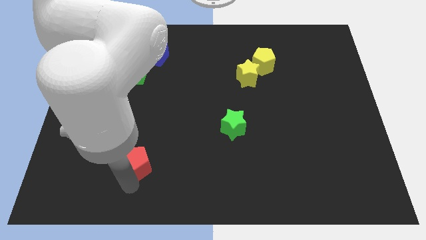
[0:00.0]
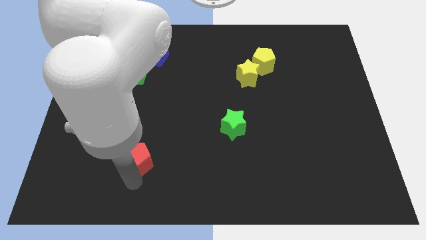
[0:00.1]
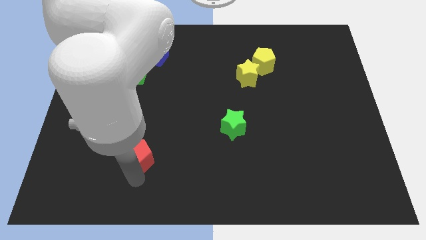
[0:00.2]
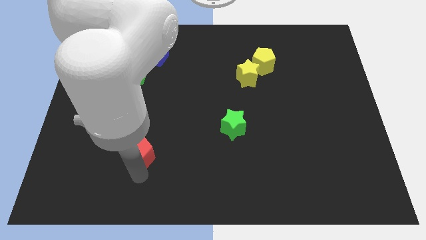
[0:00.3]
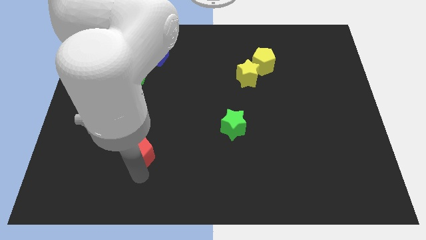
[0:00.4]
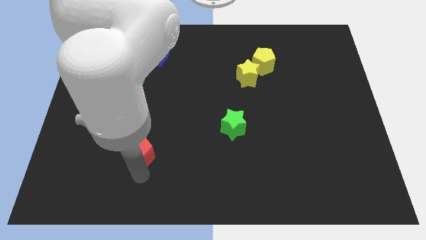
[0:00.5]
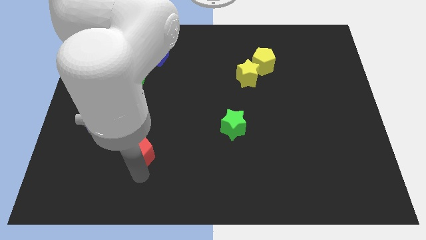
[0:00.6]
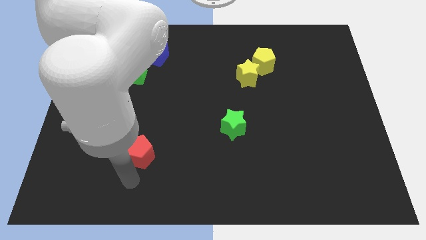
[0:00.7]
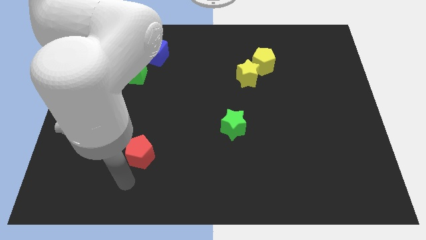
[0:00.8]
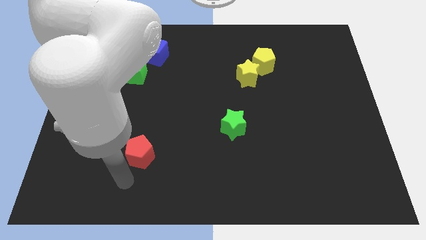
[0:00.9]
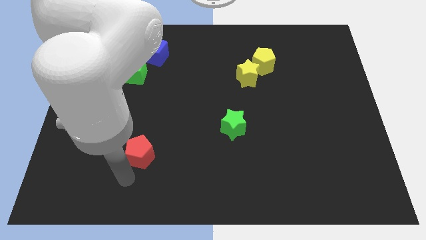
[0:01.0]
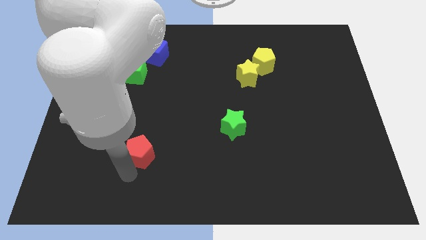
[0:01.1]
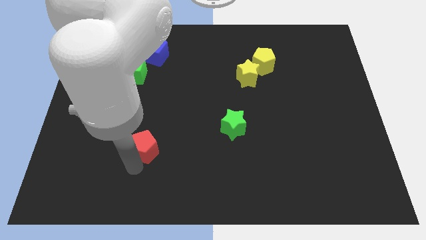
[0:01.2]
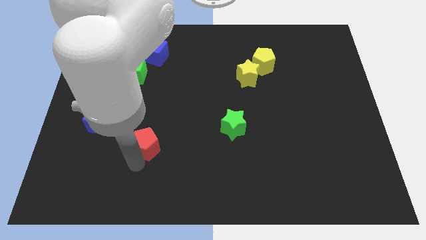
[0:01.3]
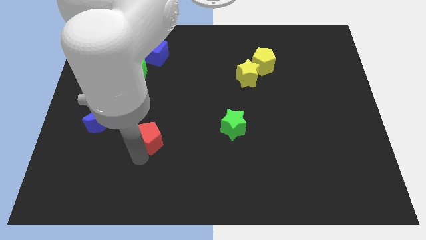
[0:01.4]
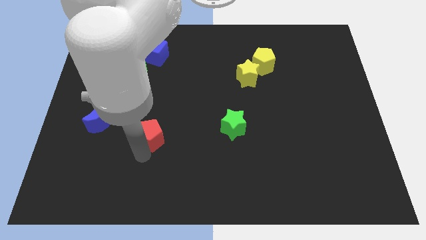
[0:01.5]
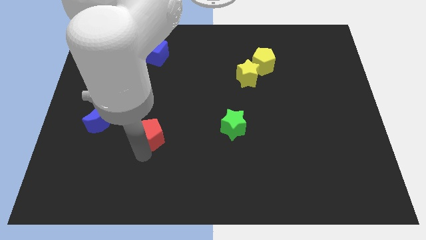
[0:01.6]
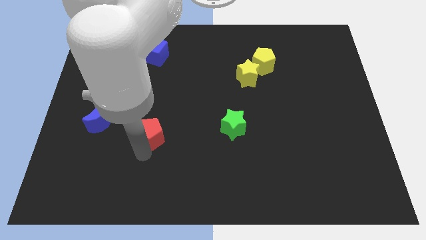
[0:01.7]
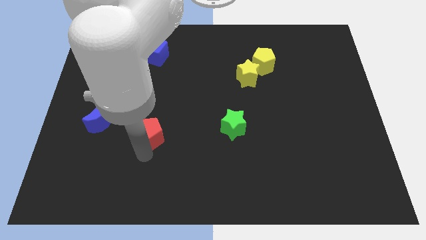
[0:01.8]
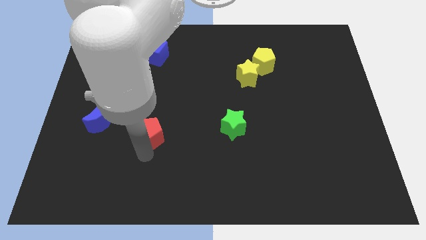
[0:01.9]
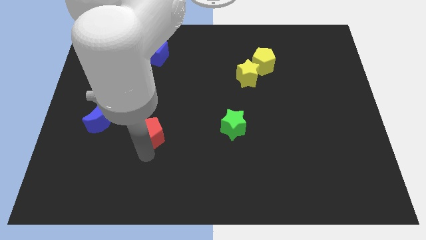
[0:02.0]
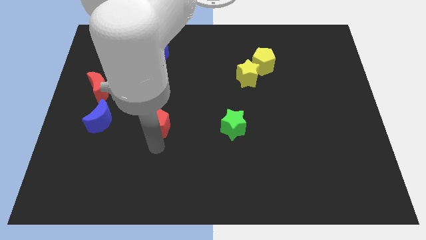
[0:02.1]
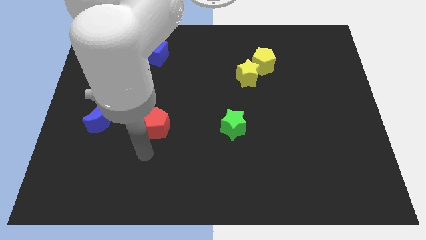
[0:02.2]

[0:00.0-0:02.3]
push the red pentagon to the left of the green star

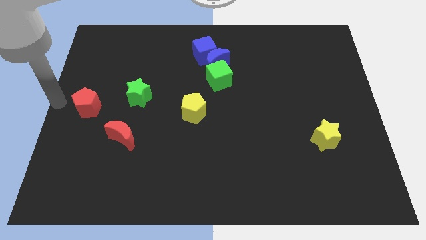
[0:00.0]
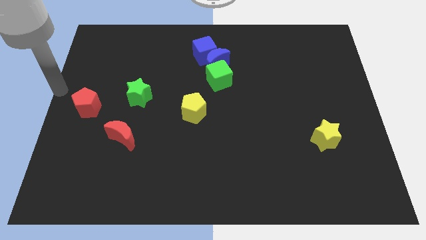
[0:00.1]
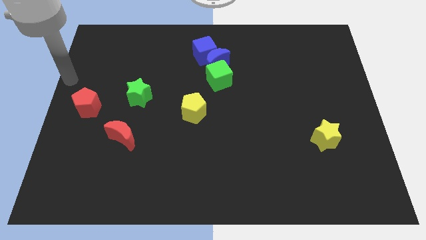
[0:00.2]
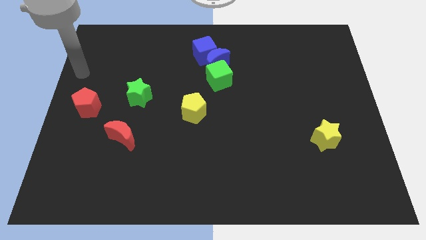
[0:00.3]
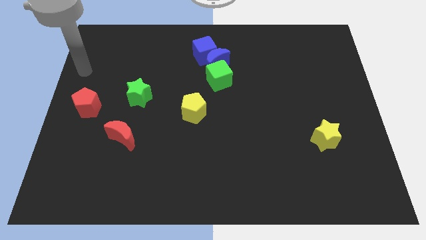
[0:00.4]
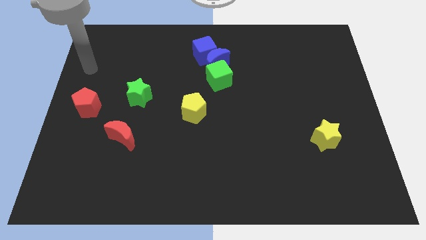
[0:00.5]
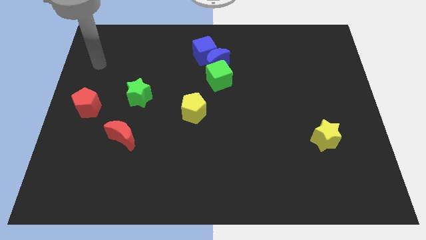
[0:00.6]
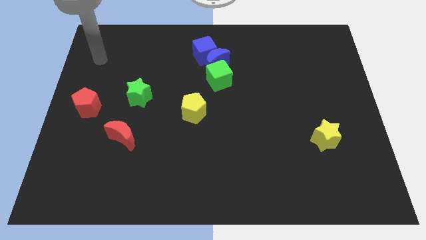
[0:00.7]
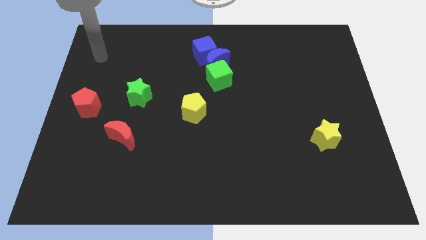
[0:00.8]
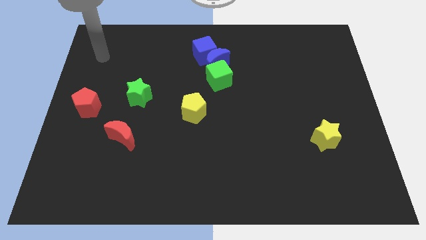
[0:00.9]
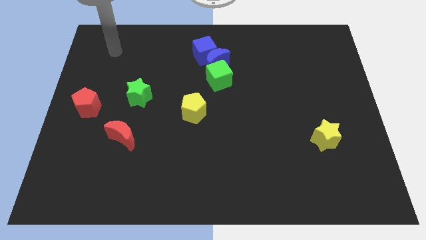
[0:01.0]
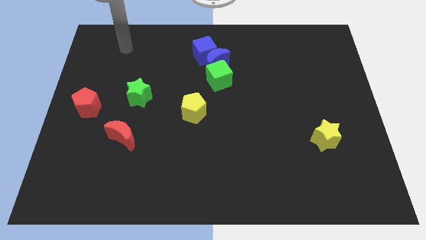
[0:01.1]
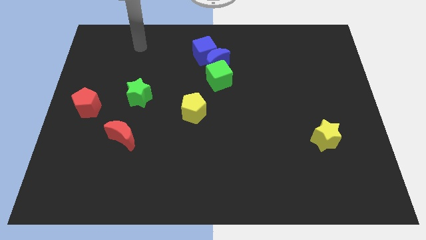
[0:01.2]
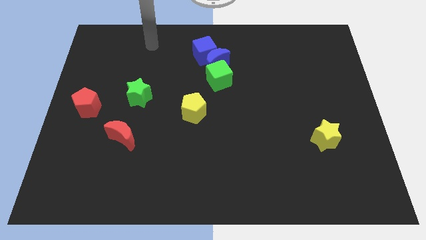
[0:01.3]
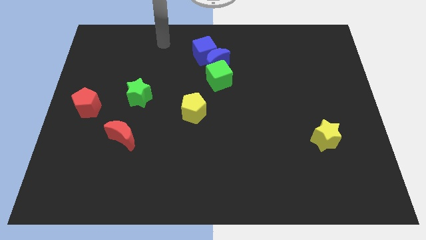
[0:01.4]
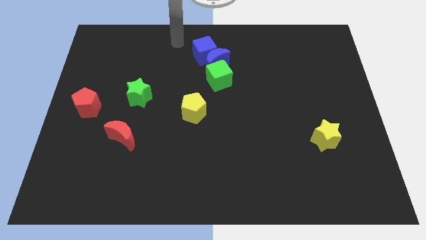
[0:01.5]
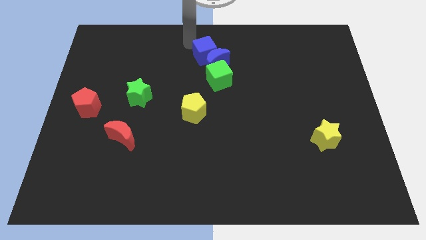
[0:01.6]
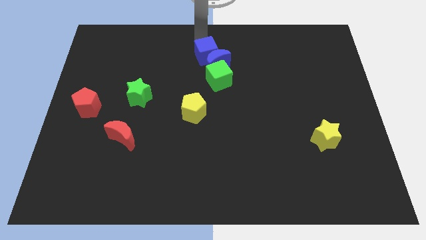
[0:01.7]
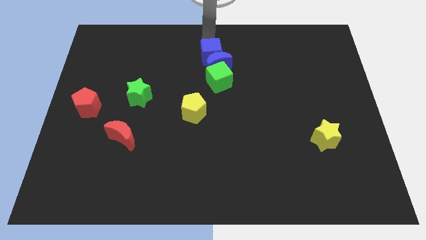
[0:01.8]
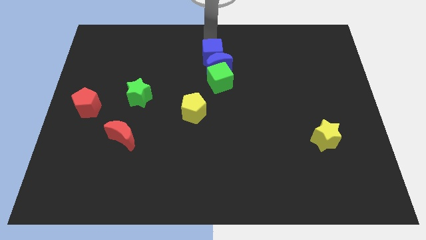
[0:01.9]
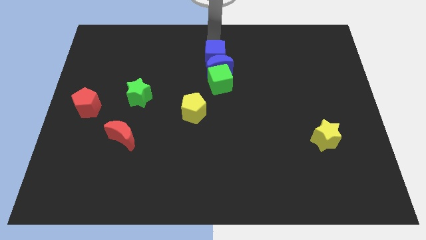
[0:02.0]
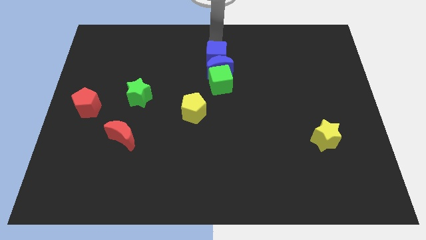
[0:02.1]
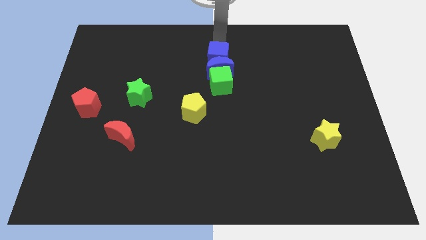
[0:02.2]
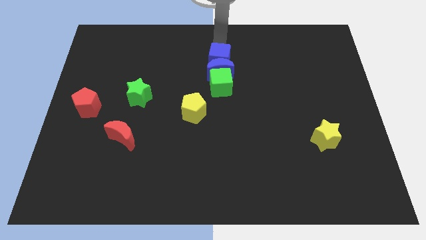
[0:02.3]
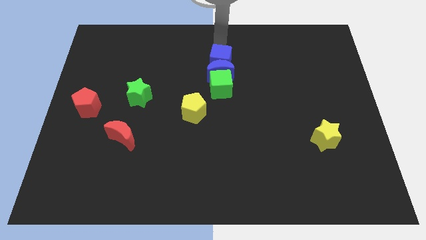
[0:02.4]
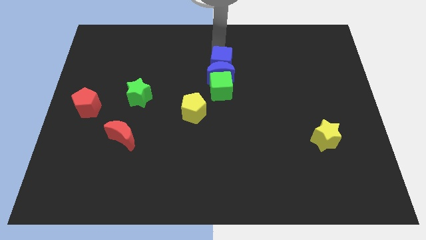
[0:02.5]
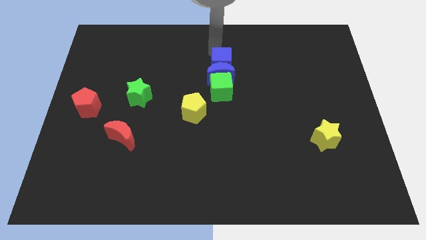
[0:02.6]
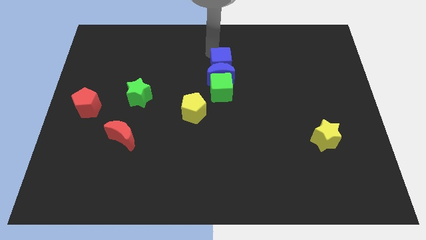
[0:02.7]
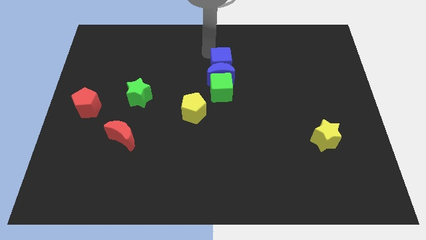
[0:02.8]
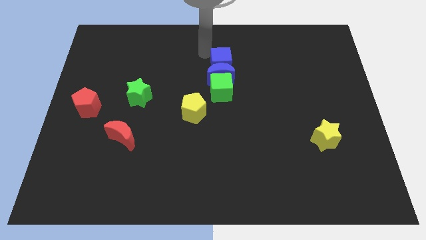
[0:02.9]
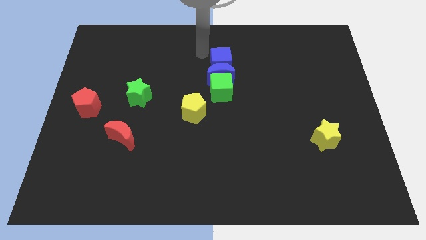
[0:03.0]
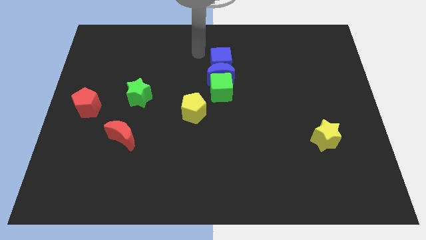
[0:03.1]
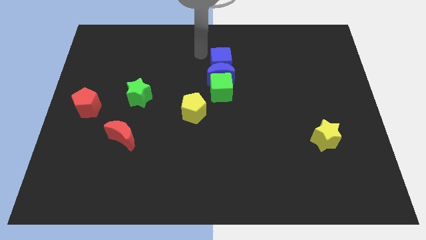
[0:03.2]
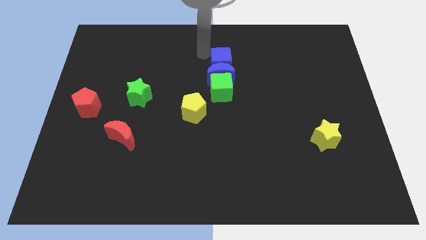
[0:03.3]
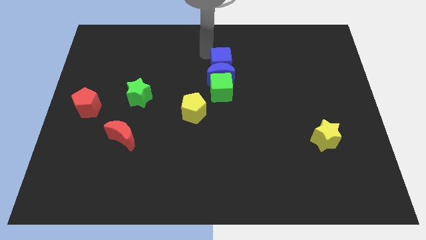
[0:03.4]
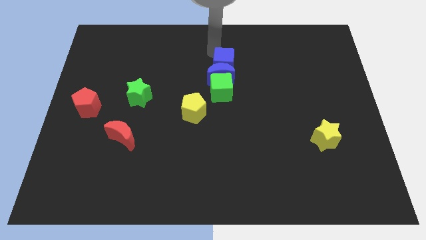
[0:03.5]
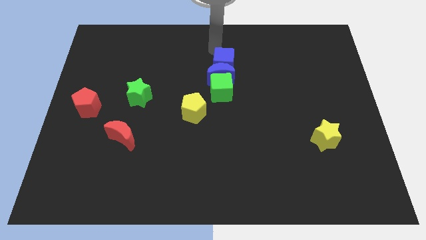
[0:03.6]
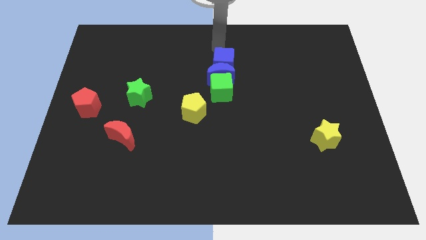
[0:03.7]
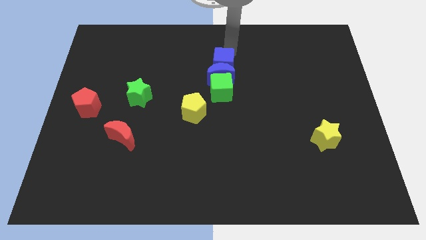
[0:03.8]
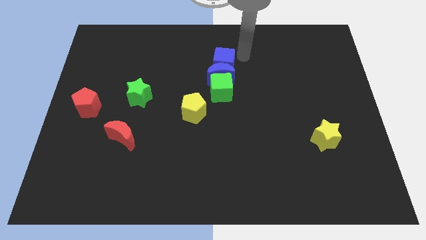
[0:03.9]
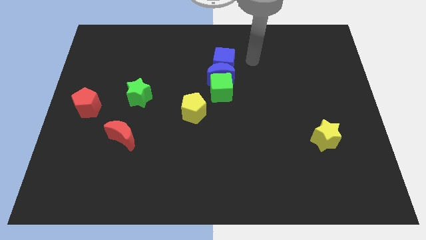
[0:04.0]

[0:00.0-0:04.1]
push the blue cube to the bottom of the board

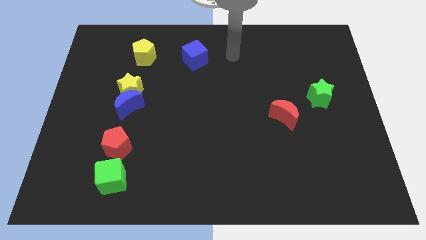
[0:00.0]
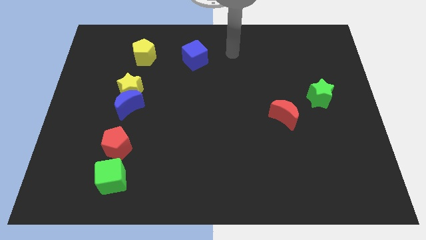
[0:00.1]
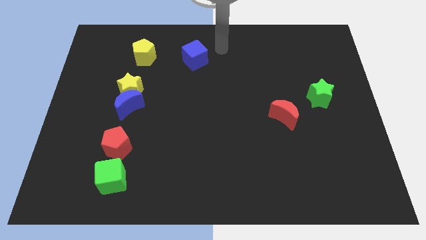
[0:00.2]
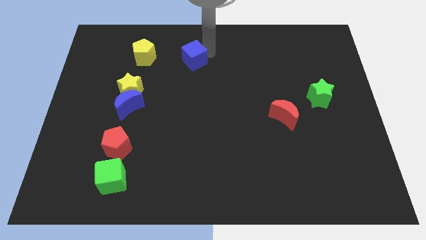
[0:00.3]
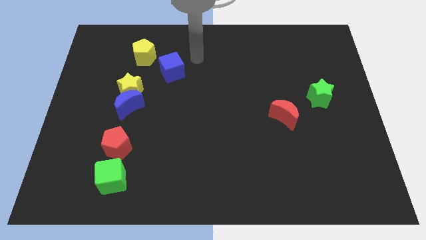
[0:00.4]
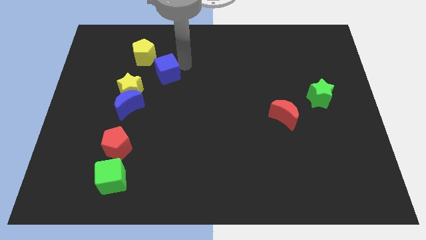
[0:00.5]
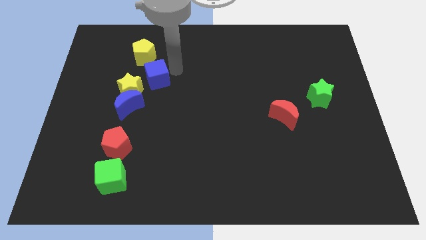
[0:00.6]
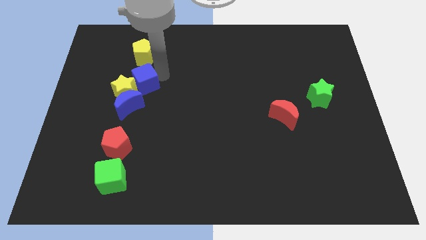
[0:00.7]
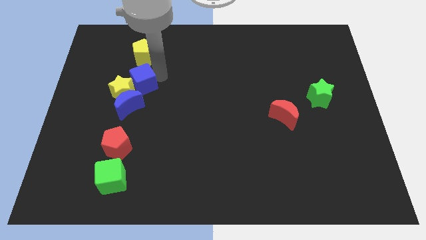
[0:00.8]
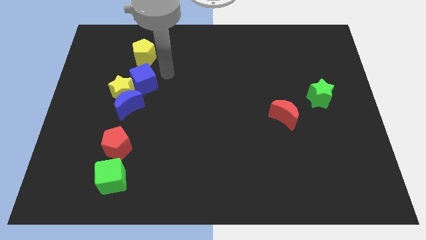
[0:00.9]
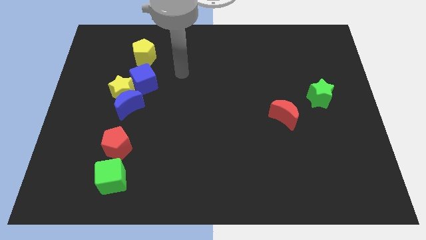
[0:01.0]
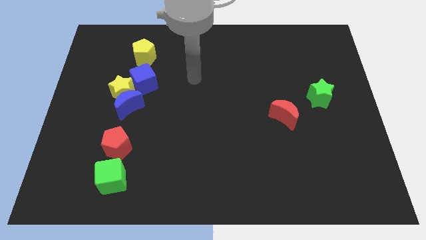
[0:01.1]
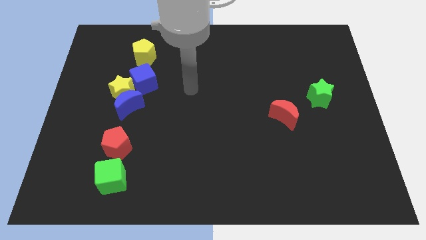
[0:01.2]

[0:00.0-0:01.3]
push the blue cube into the yellow star

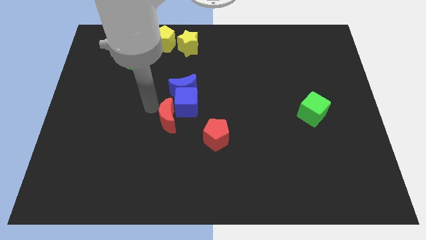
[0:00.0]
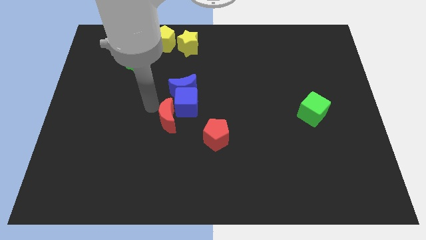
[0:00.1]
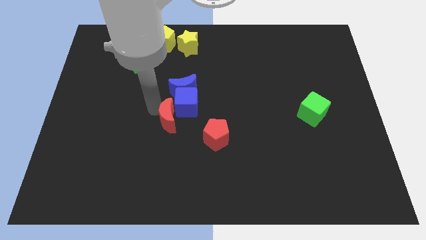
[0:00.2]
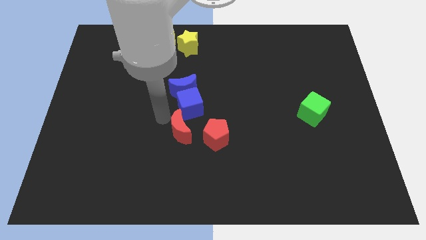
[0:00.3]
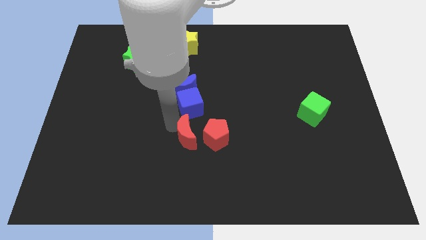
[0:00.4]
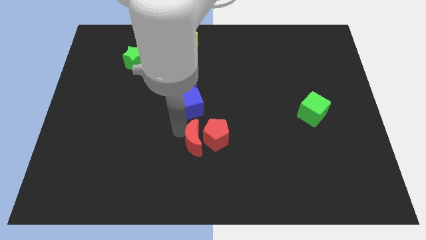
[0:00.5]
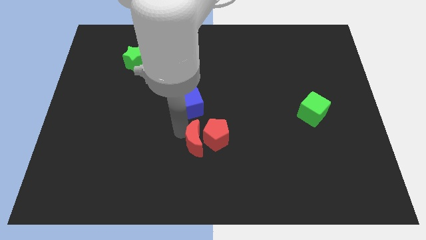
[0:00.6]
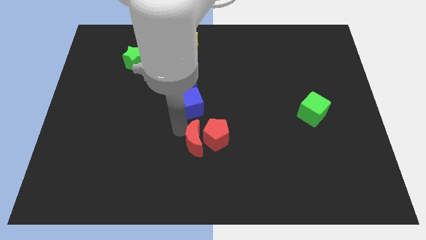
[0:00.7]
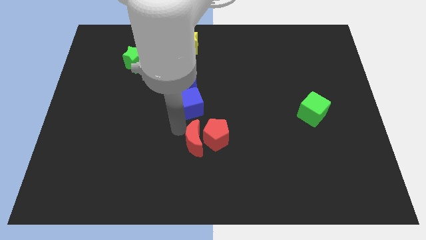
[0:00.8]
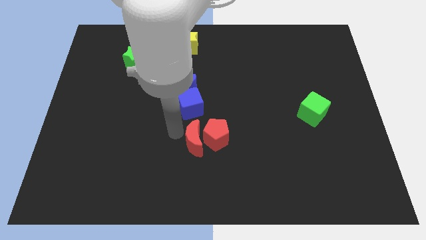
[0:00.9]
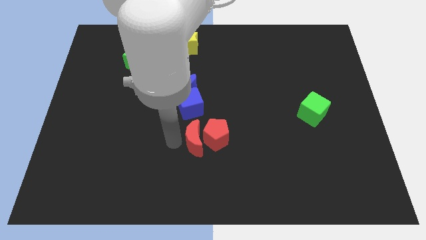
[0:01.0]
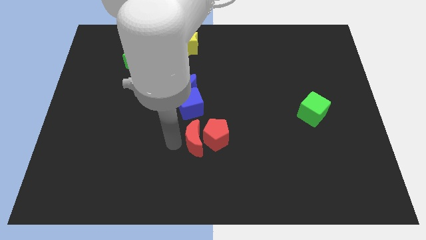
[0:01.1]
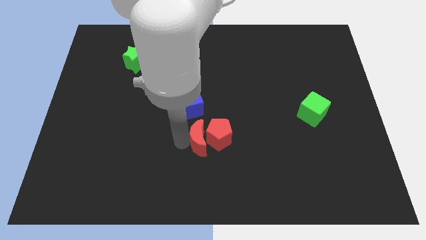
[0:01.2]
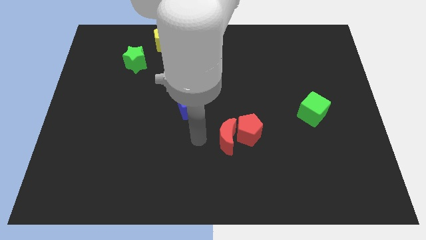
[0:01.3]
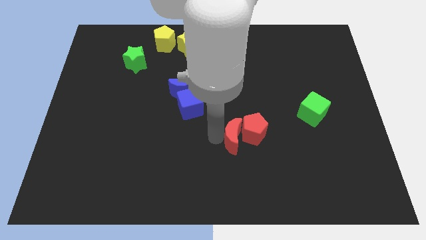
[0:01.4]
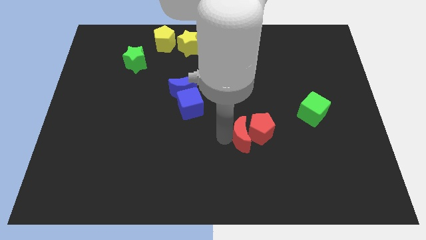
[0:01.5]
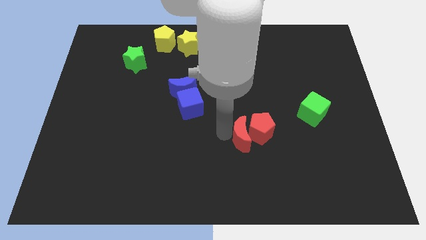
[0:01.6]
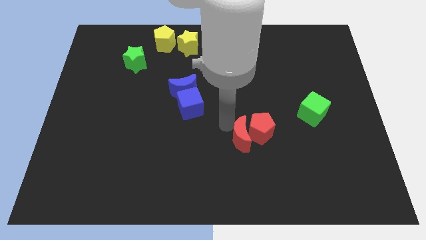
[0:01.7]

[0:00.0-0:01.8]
move red moon left beside the red pentagon
